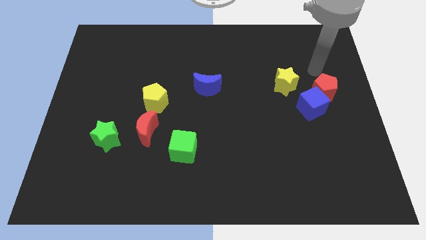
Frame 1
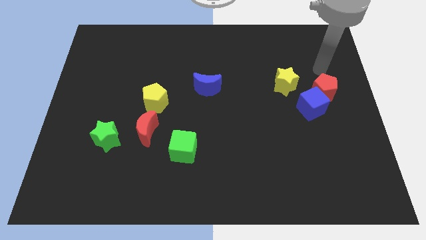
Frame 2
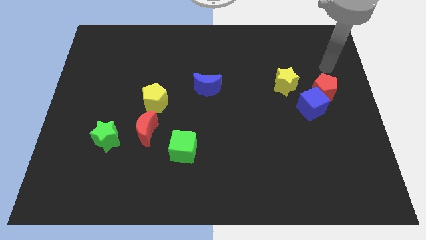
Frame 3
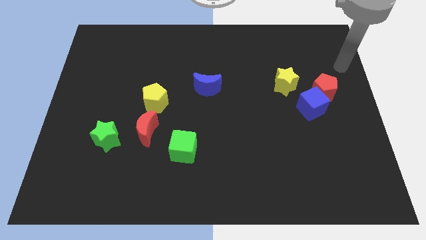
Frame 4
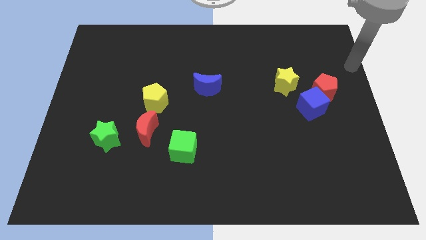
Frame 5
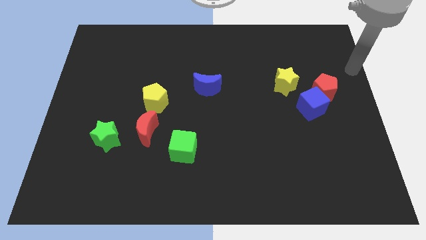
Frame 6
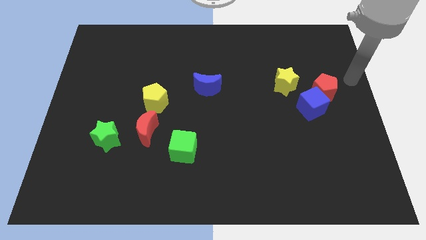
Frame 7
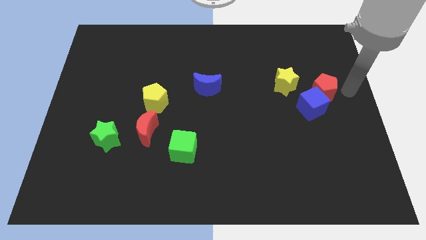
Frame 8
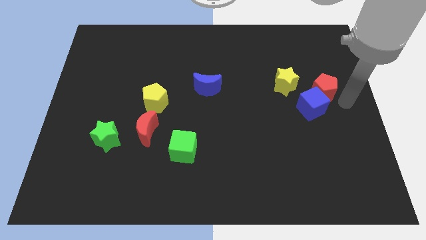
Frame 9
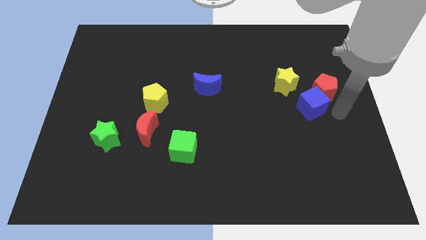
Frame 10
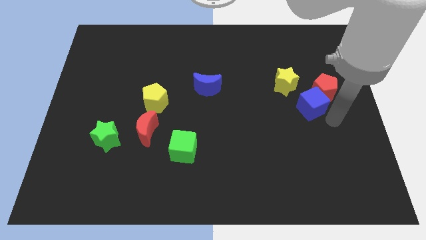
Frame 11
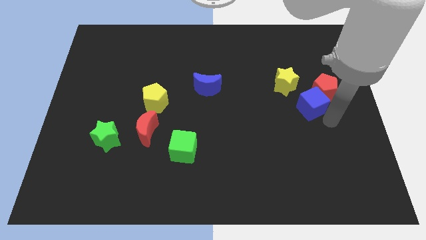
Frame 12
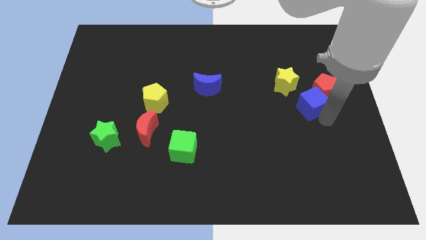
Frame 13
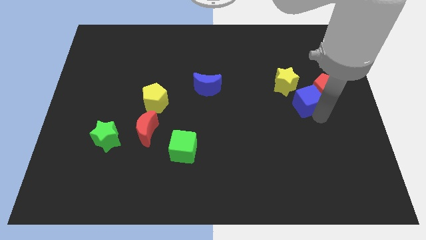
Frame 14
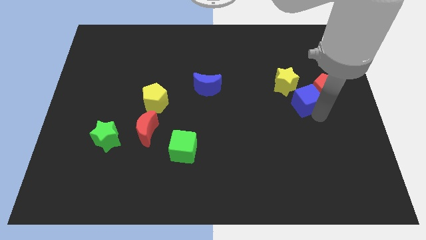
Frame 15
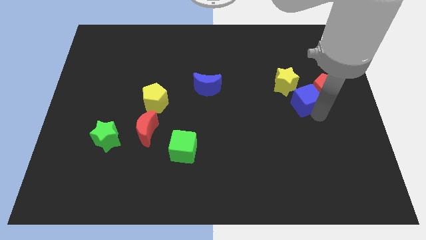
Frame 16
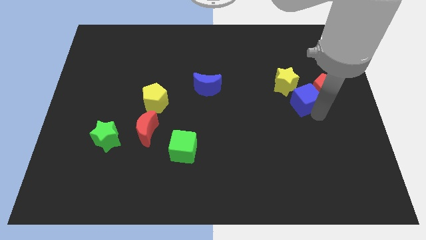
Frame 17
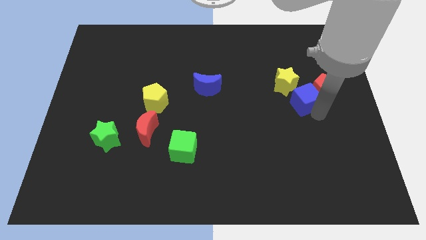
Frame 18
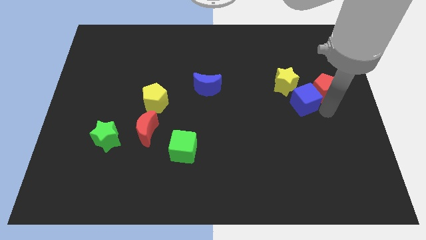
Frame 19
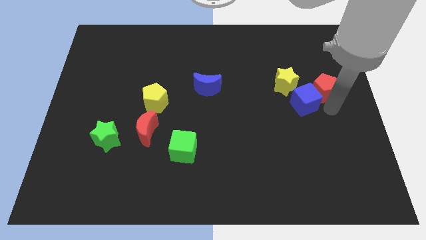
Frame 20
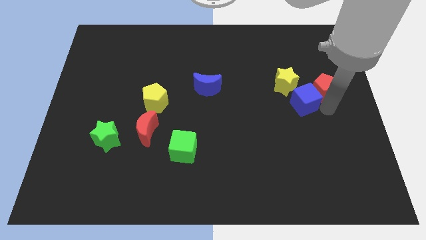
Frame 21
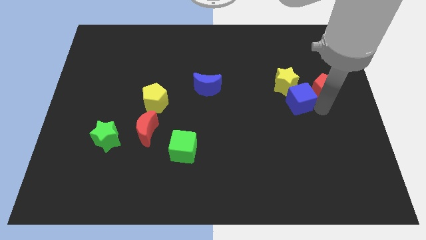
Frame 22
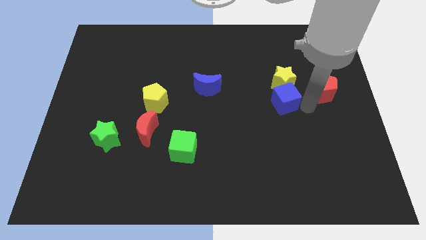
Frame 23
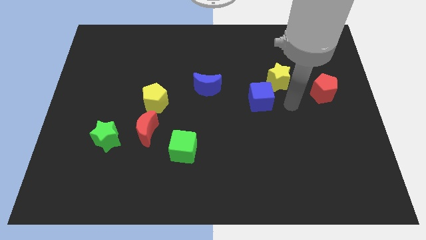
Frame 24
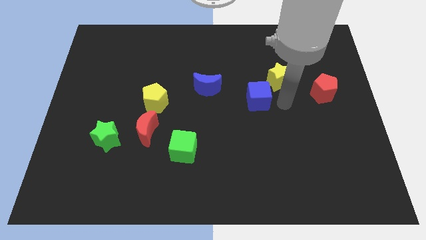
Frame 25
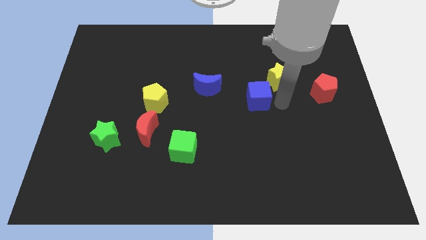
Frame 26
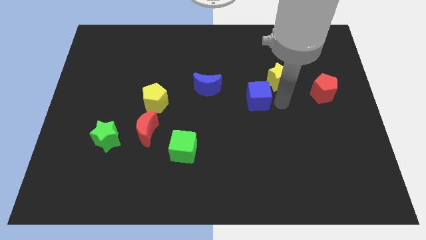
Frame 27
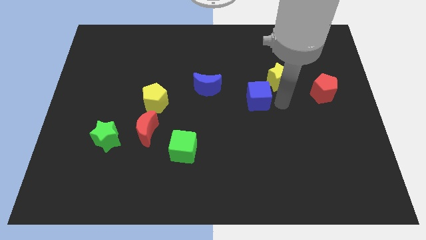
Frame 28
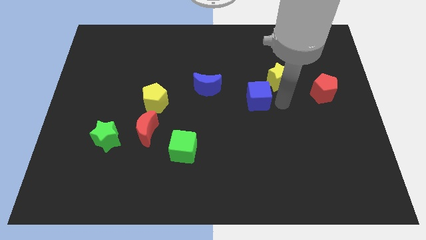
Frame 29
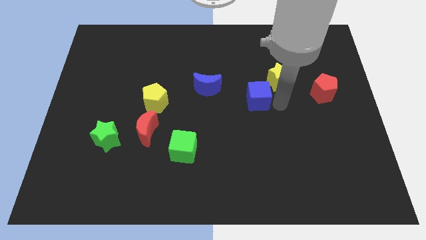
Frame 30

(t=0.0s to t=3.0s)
move the blue cube diagonally left of the yellow star

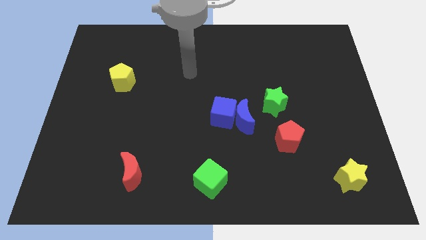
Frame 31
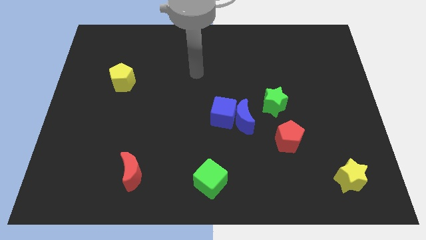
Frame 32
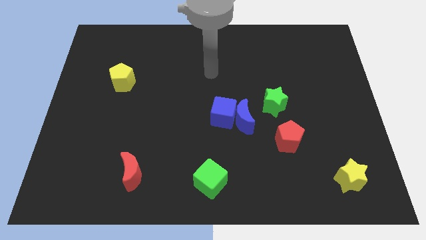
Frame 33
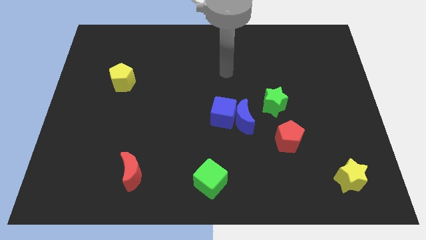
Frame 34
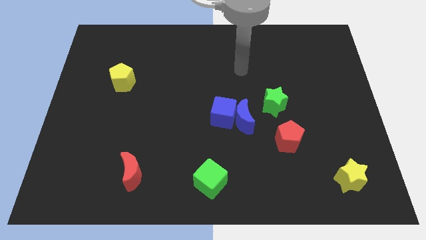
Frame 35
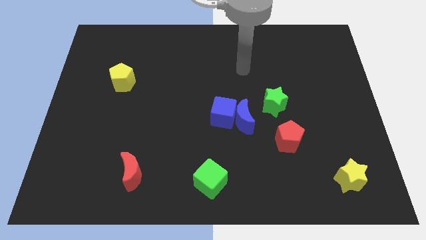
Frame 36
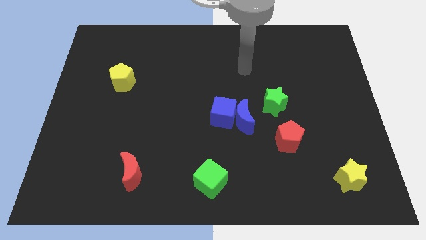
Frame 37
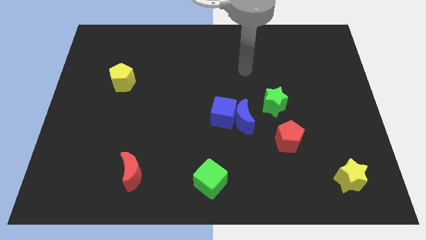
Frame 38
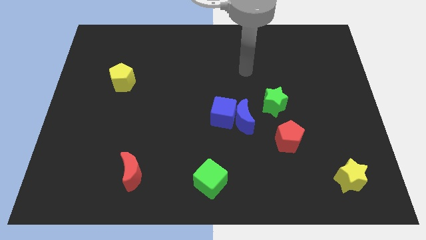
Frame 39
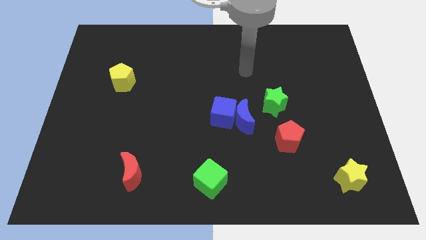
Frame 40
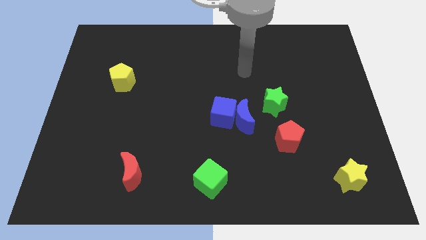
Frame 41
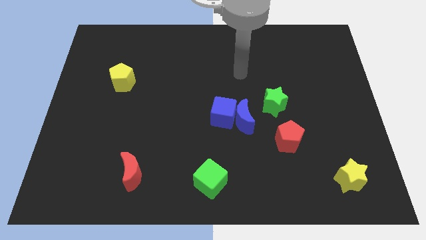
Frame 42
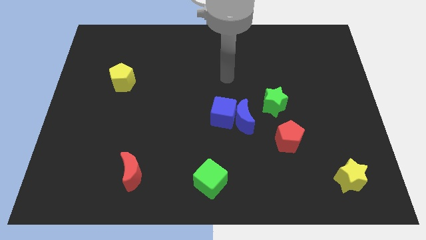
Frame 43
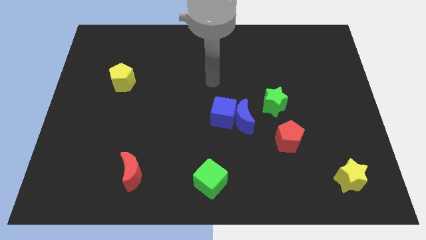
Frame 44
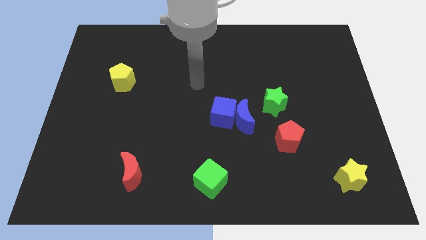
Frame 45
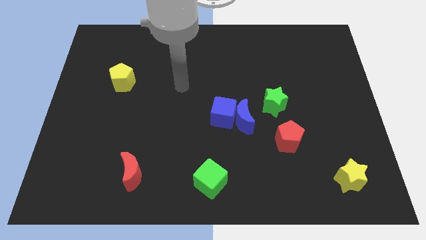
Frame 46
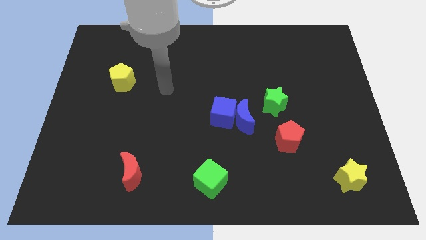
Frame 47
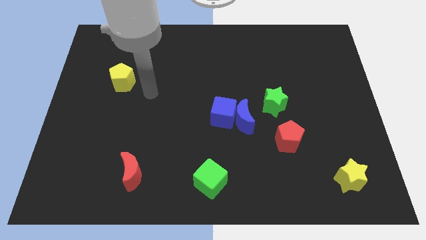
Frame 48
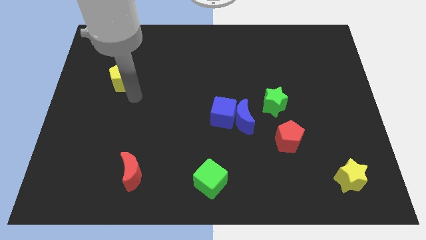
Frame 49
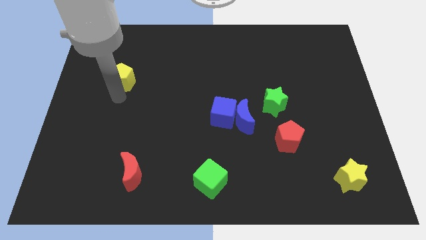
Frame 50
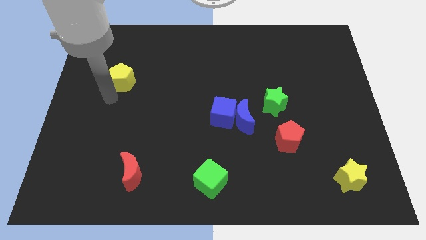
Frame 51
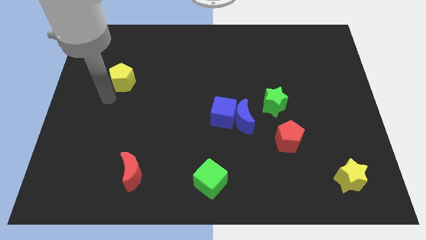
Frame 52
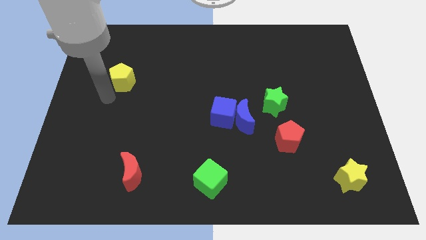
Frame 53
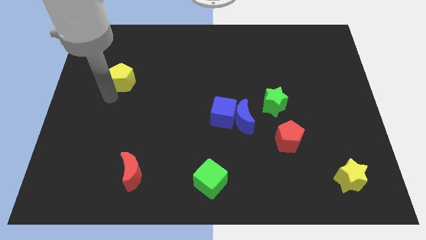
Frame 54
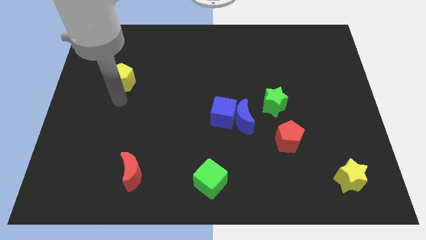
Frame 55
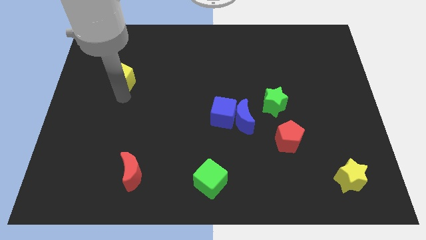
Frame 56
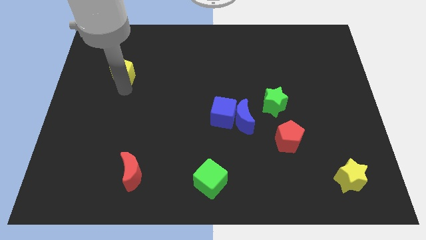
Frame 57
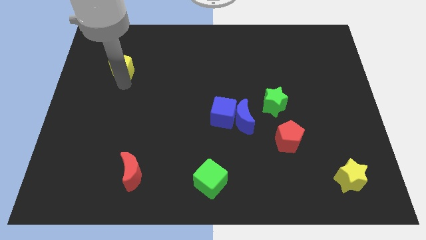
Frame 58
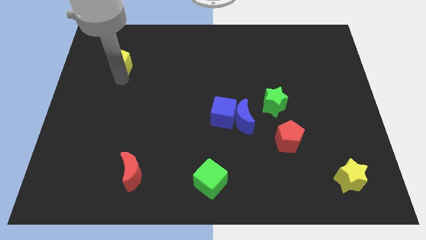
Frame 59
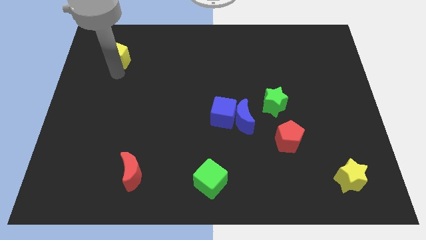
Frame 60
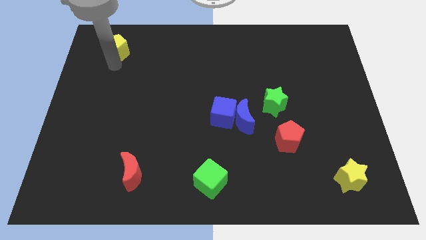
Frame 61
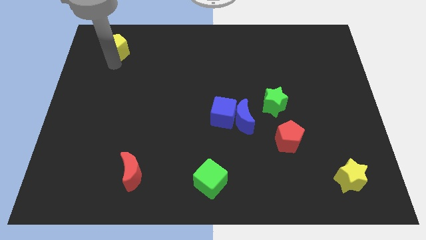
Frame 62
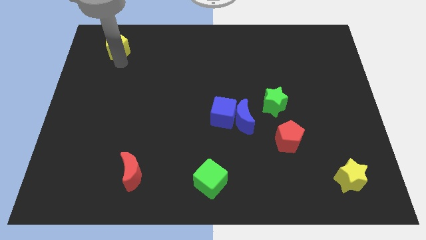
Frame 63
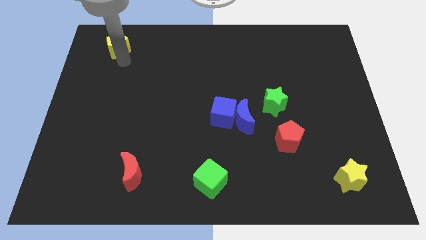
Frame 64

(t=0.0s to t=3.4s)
go and push the yellow pentagon to the top left of the board

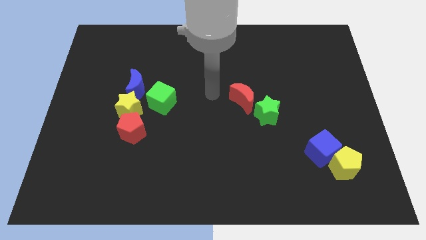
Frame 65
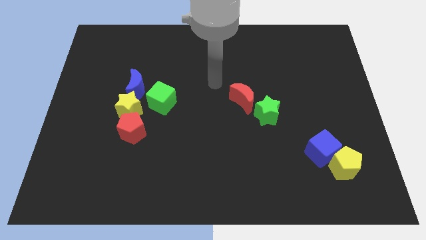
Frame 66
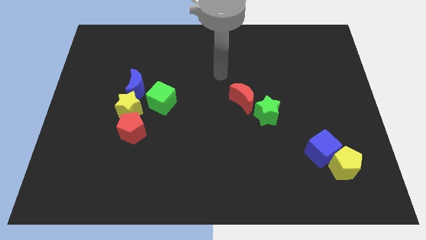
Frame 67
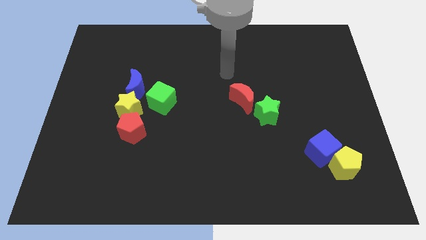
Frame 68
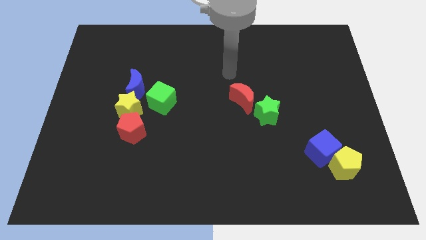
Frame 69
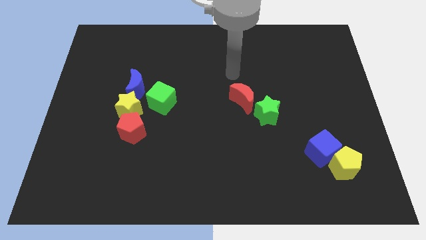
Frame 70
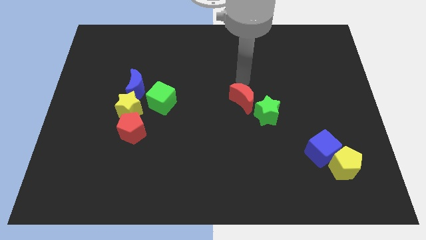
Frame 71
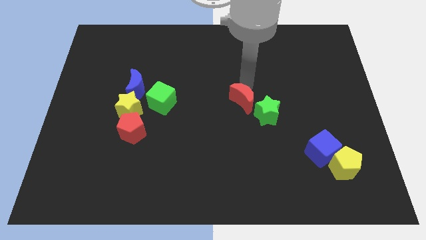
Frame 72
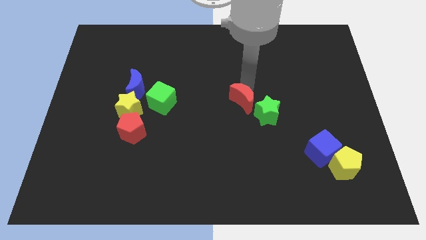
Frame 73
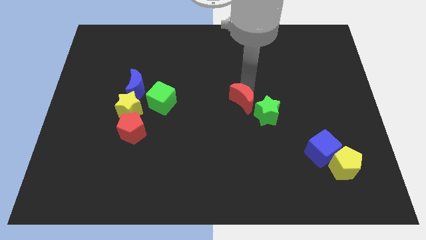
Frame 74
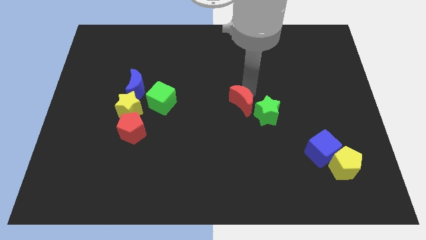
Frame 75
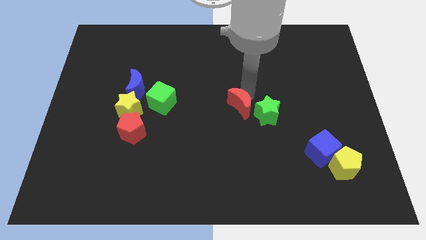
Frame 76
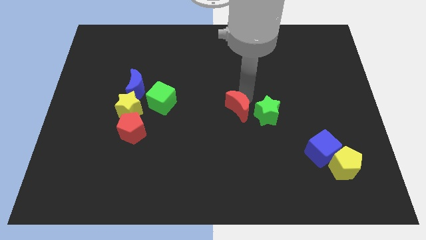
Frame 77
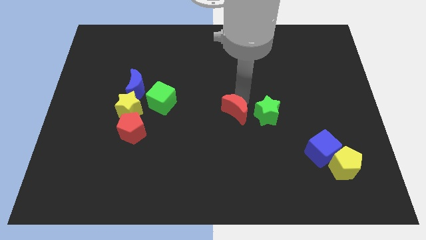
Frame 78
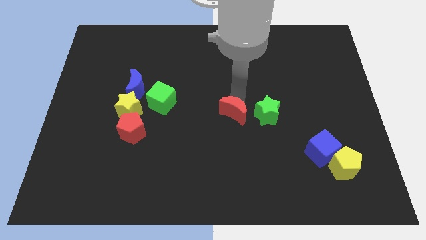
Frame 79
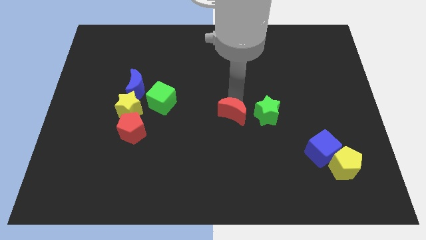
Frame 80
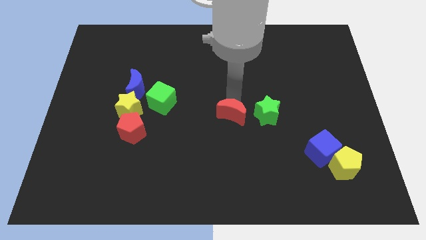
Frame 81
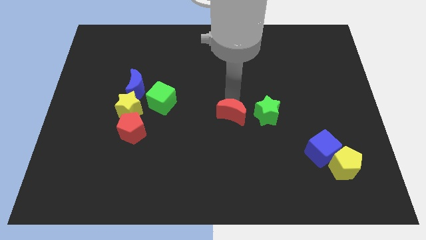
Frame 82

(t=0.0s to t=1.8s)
push the red crescent slightly to the bottom

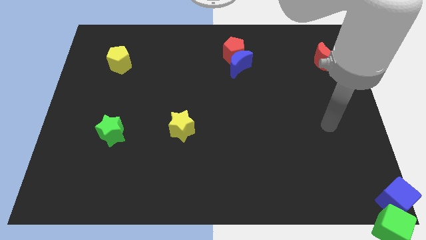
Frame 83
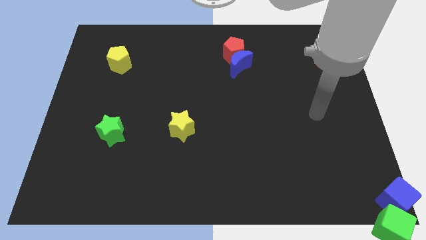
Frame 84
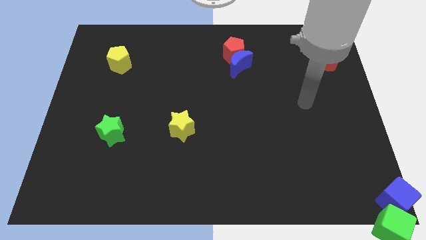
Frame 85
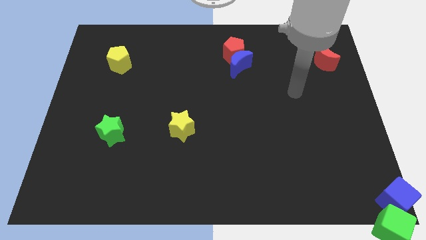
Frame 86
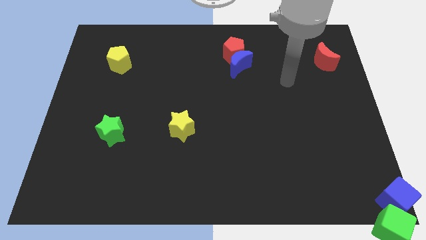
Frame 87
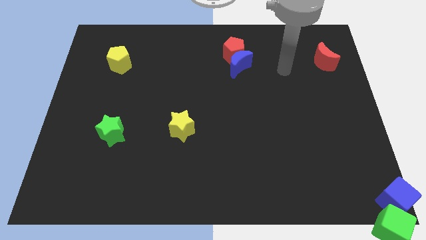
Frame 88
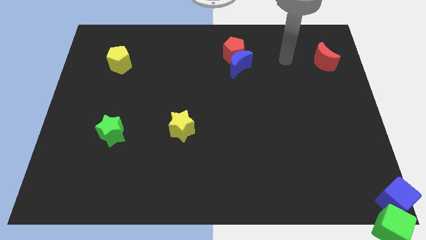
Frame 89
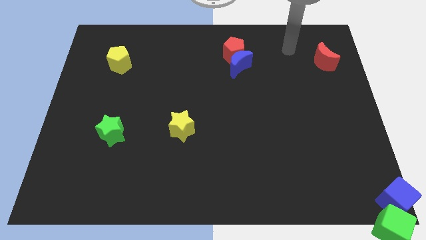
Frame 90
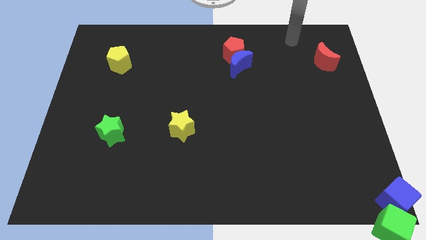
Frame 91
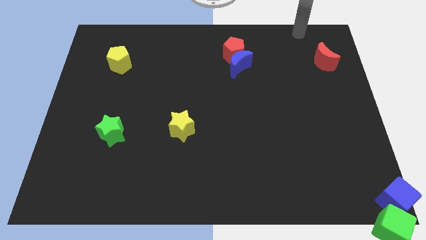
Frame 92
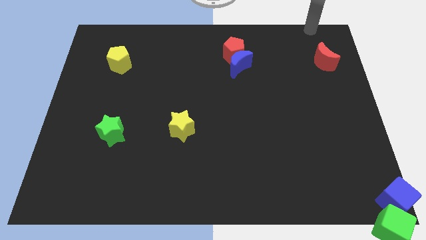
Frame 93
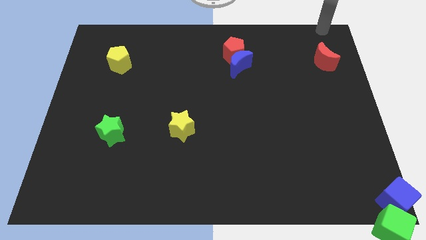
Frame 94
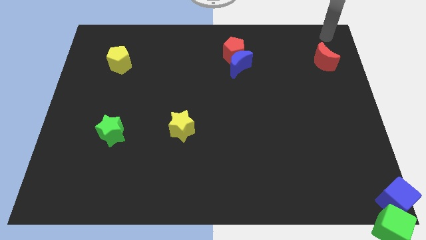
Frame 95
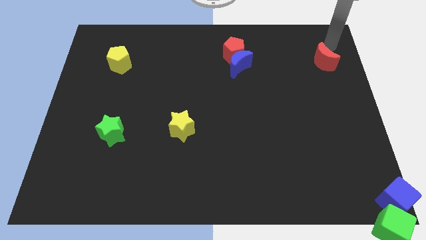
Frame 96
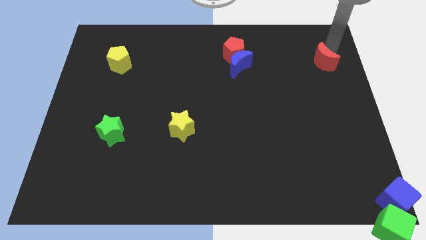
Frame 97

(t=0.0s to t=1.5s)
go near the red moon
